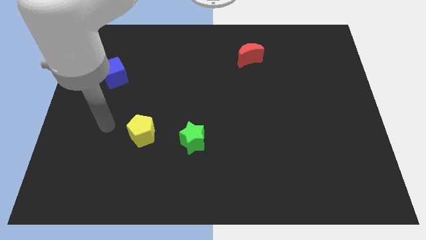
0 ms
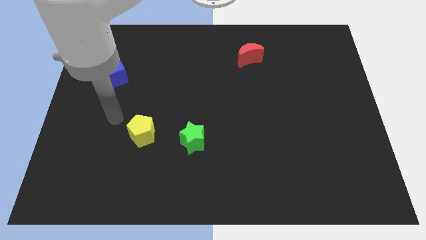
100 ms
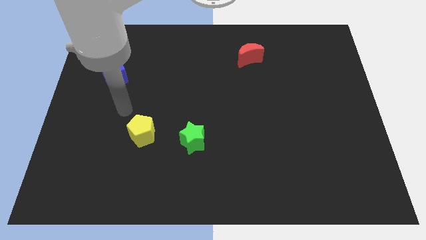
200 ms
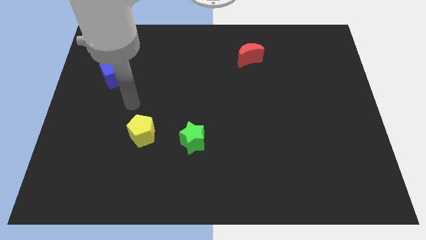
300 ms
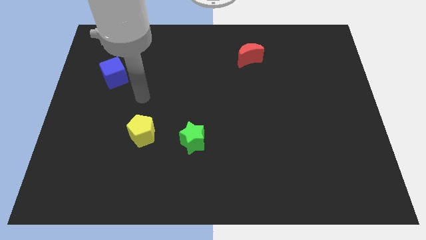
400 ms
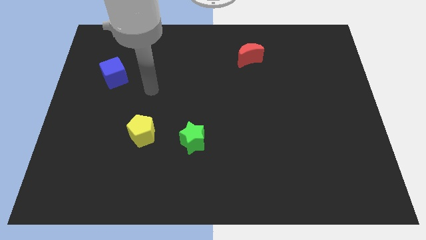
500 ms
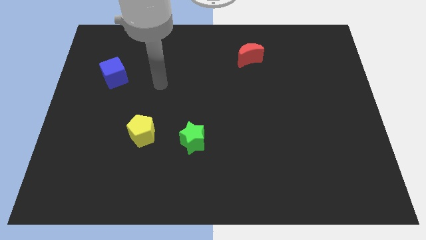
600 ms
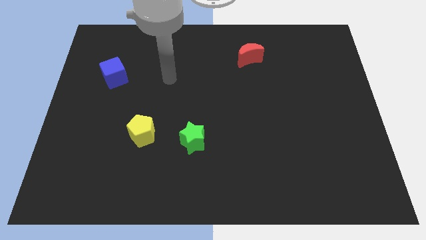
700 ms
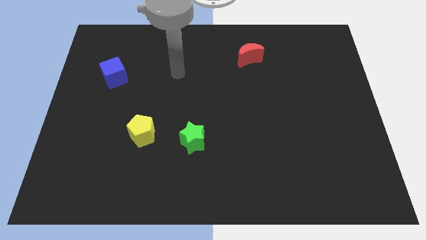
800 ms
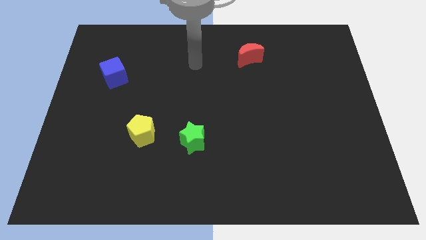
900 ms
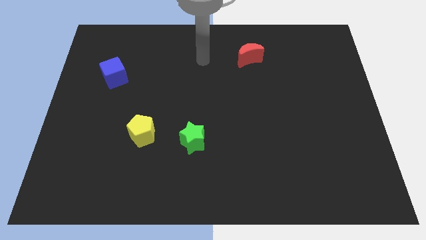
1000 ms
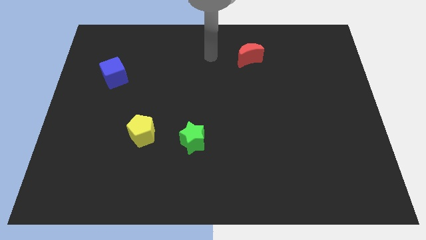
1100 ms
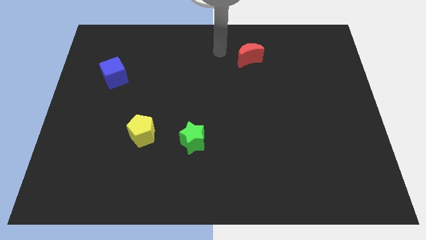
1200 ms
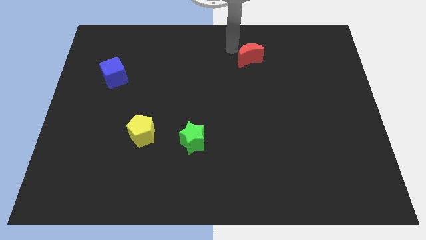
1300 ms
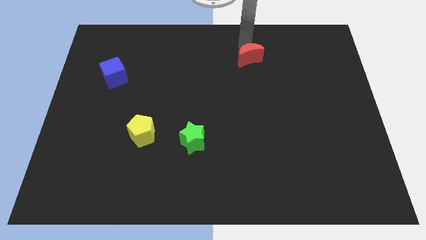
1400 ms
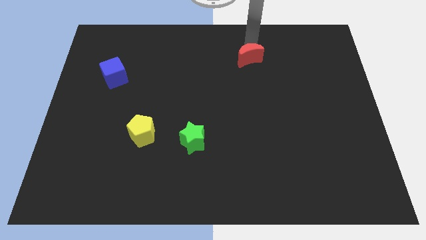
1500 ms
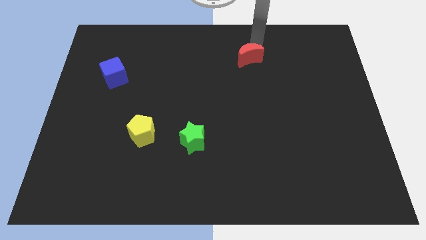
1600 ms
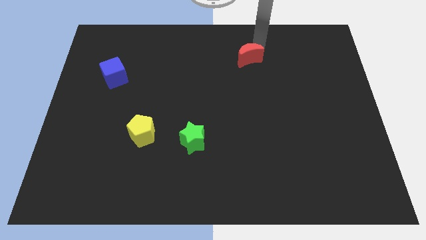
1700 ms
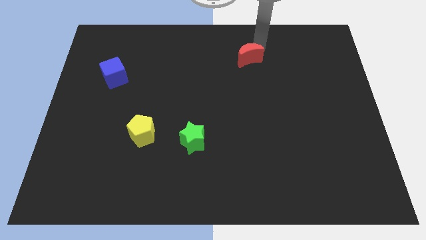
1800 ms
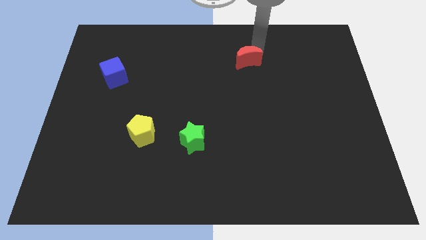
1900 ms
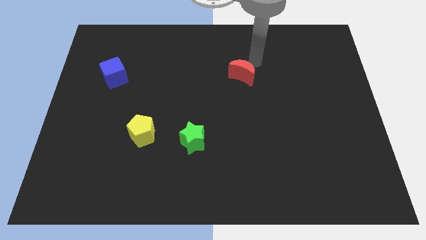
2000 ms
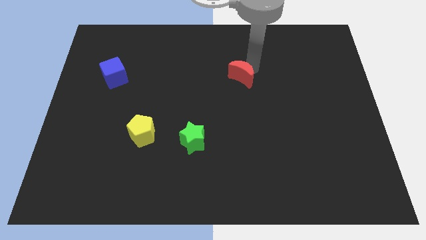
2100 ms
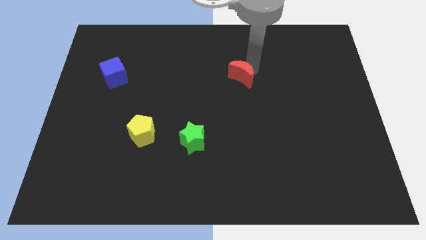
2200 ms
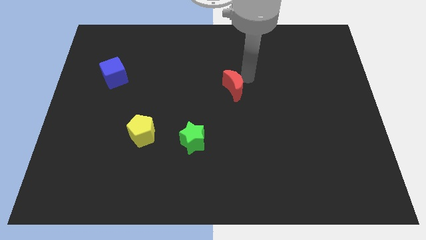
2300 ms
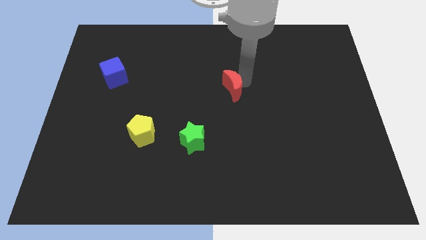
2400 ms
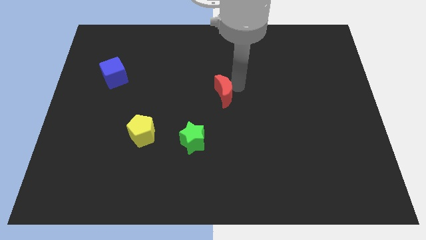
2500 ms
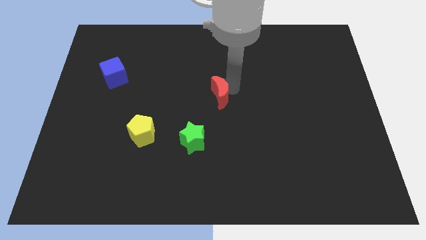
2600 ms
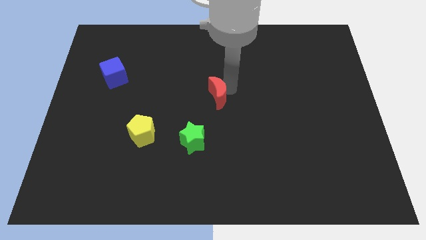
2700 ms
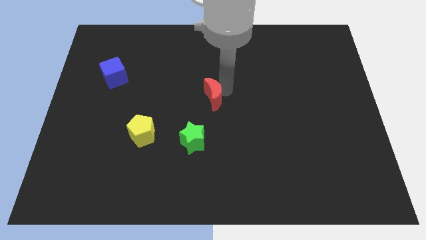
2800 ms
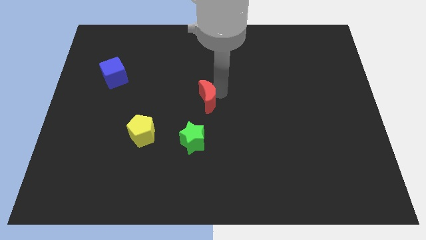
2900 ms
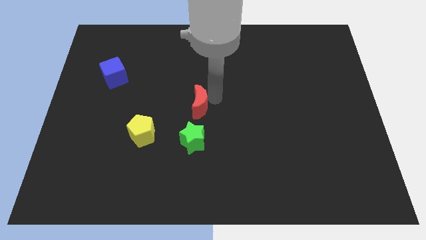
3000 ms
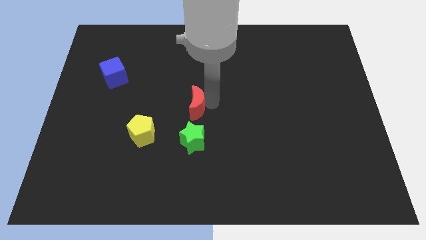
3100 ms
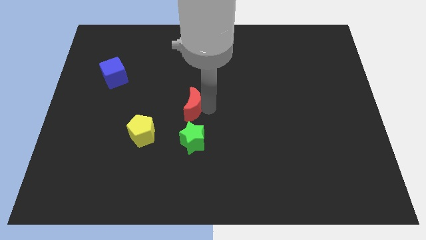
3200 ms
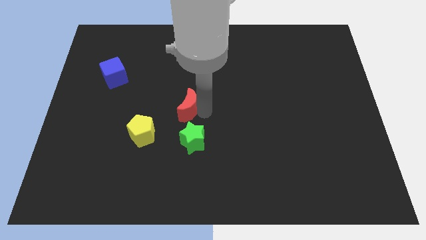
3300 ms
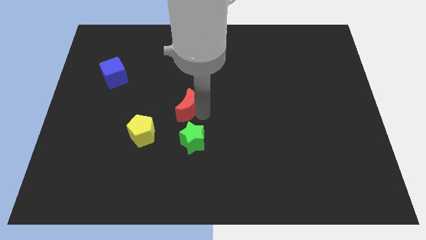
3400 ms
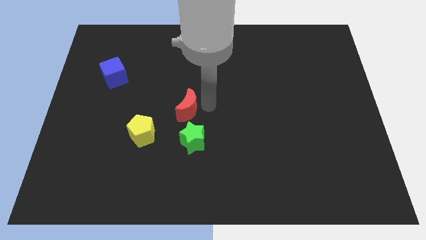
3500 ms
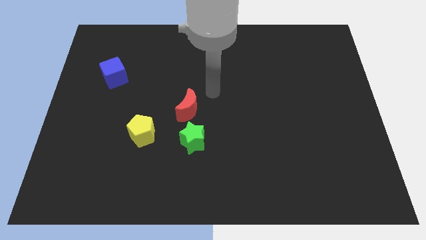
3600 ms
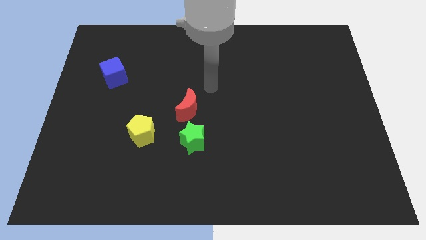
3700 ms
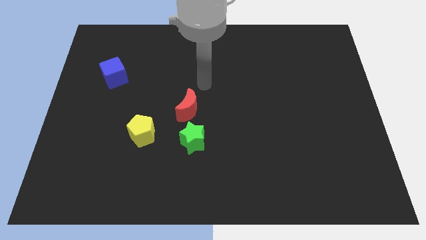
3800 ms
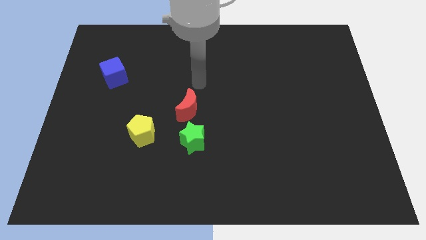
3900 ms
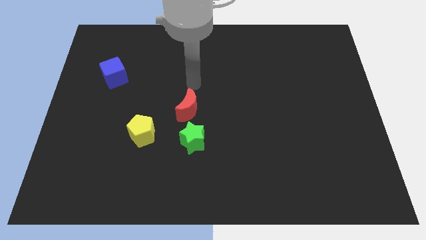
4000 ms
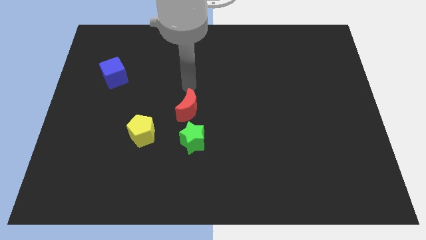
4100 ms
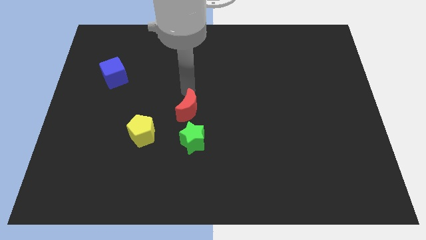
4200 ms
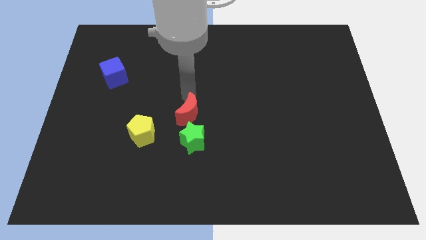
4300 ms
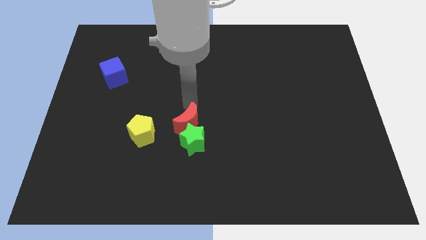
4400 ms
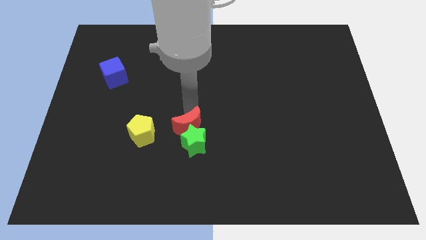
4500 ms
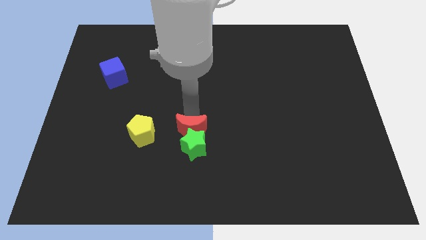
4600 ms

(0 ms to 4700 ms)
move the red block towards the green star

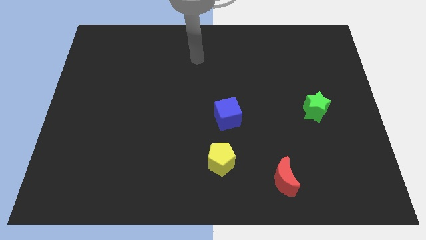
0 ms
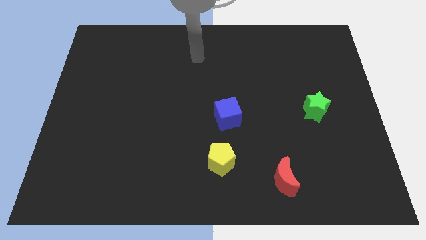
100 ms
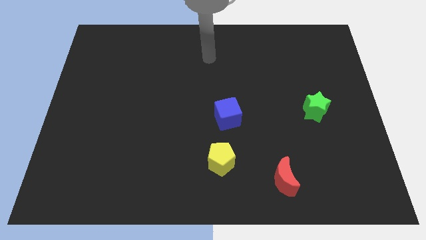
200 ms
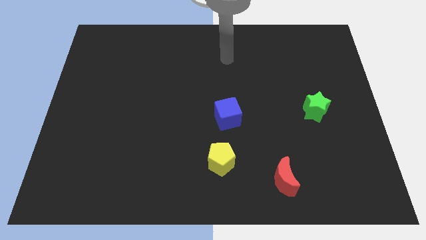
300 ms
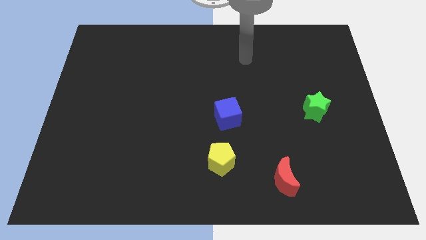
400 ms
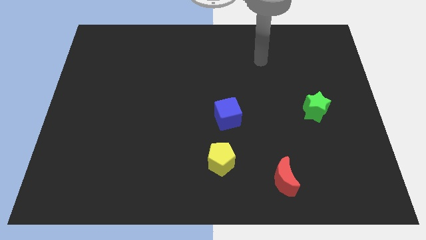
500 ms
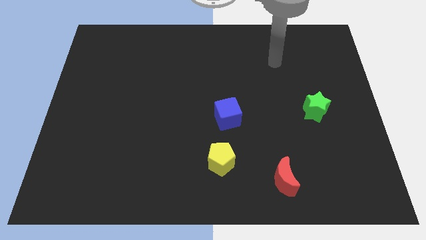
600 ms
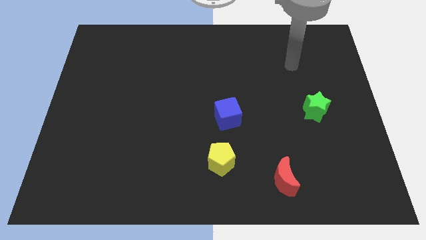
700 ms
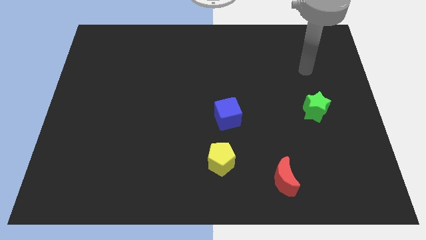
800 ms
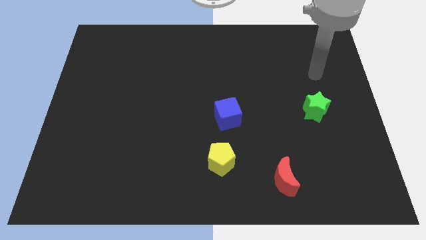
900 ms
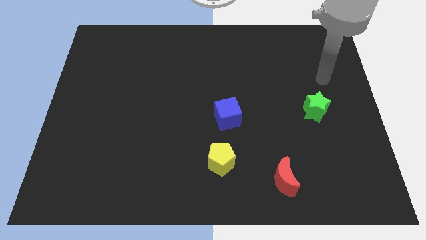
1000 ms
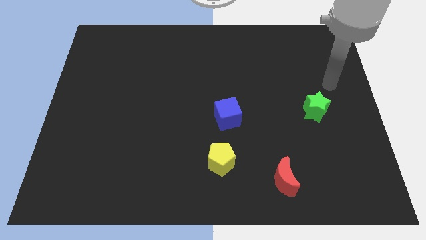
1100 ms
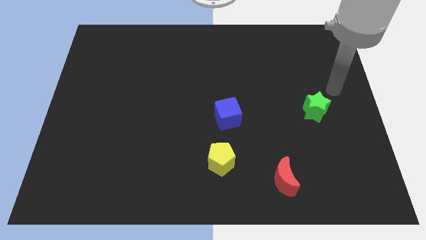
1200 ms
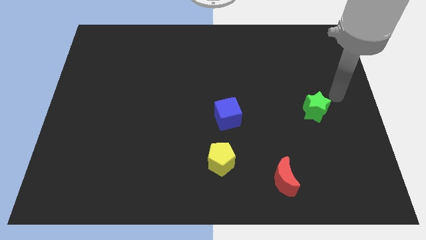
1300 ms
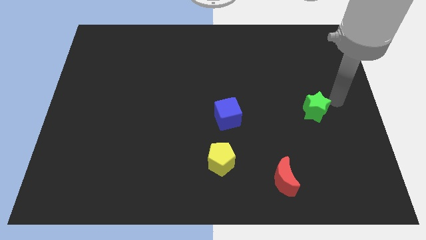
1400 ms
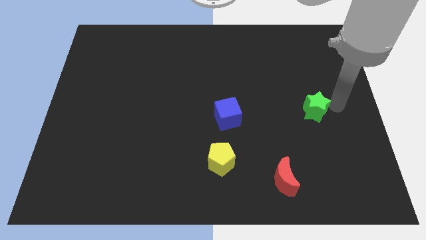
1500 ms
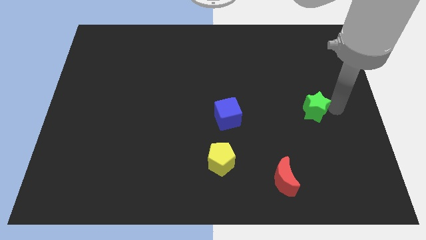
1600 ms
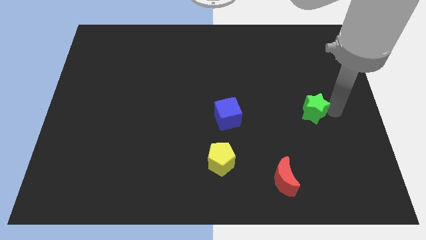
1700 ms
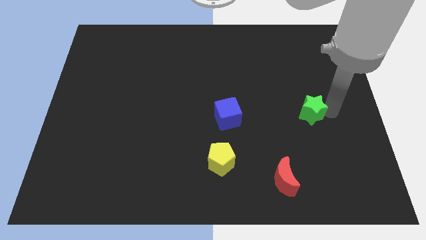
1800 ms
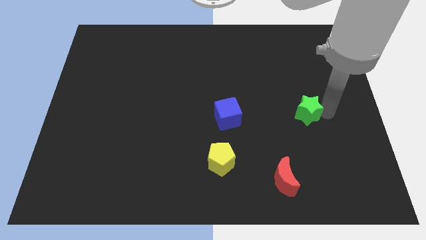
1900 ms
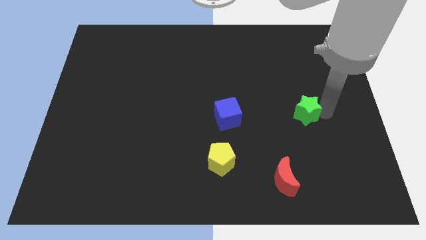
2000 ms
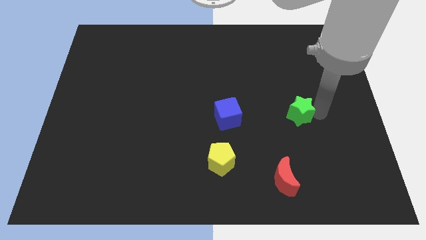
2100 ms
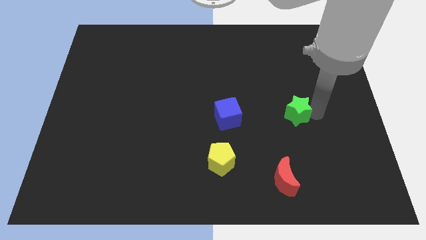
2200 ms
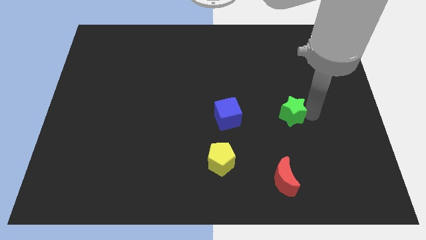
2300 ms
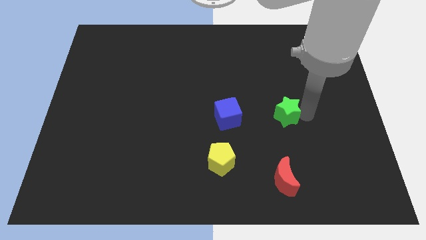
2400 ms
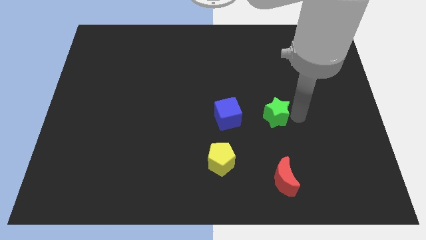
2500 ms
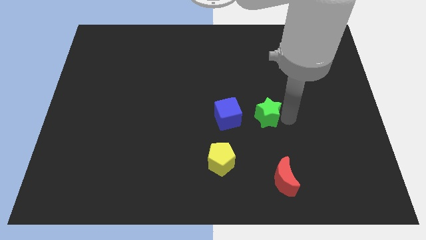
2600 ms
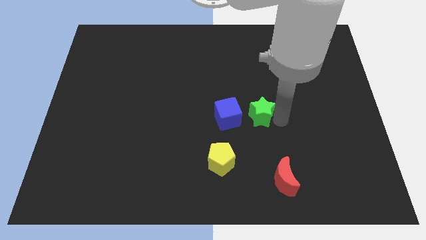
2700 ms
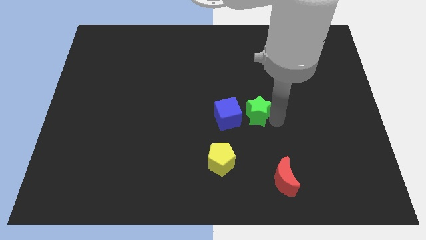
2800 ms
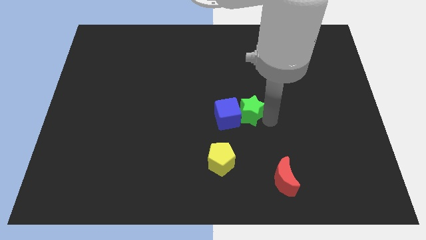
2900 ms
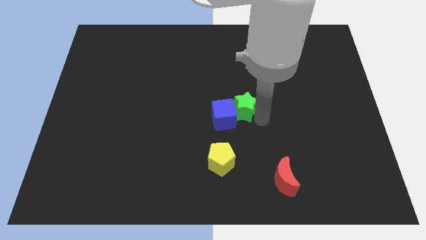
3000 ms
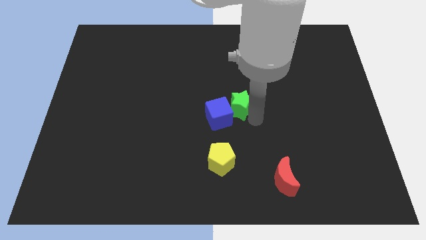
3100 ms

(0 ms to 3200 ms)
slide the green star to the cube

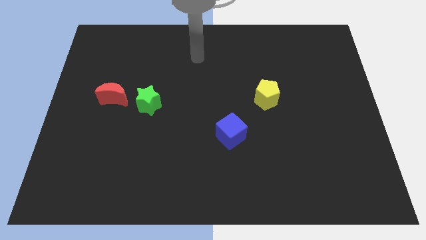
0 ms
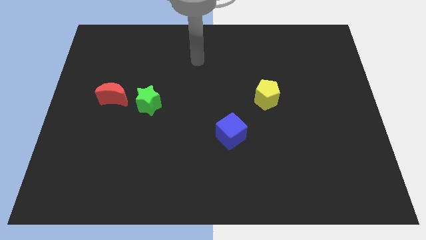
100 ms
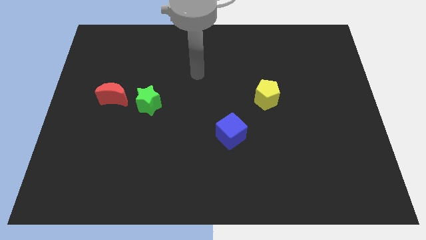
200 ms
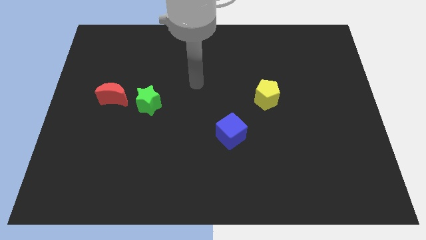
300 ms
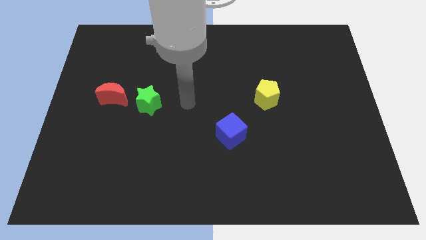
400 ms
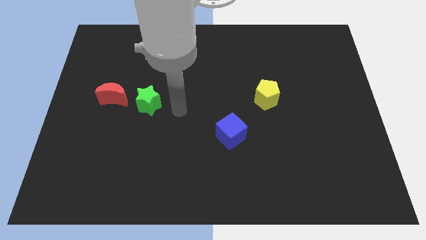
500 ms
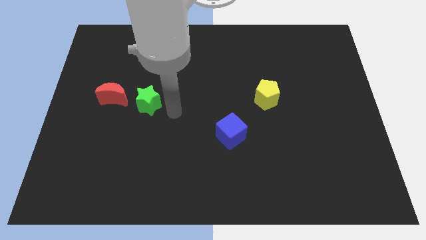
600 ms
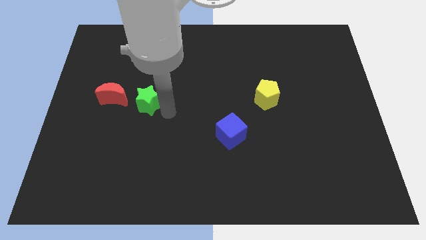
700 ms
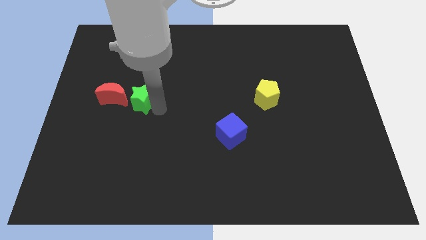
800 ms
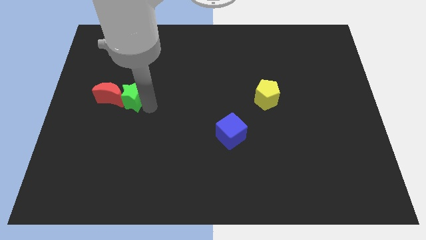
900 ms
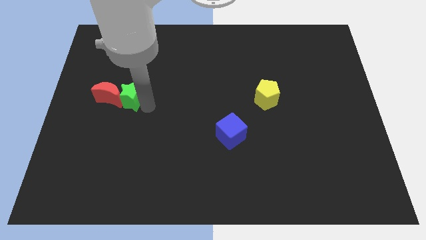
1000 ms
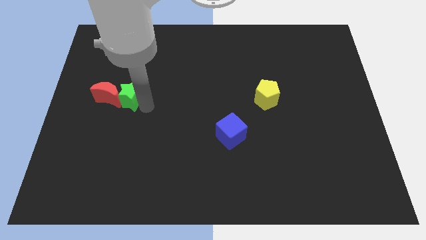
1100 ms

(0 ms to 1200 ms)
slide the star to the red moon
